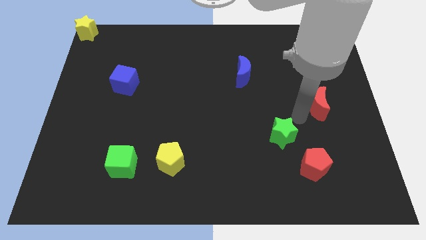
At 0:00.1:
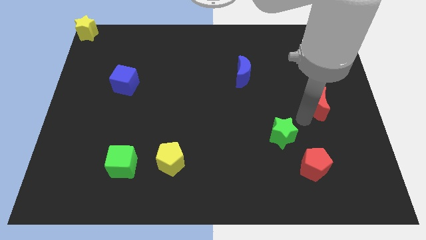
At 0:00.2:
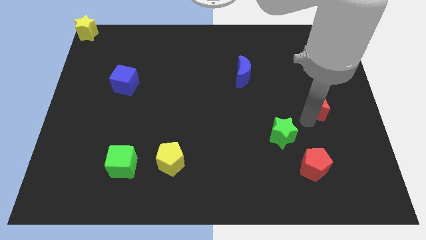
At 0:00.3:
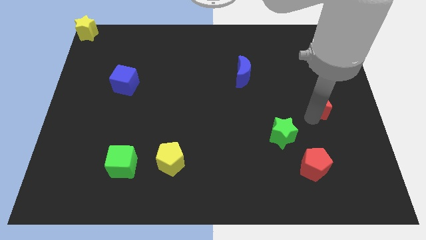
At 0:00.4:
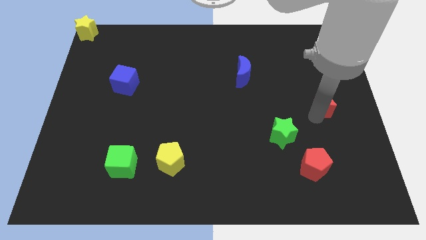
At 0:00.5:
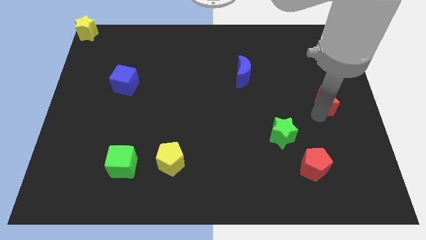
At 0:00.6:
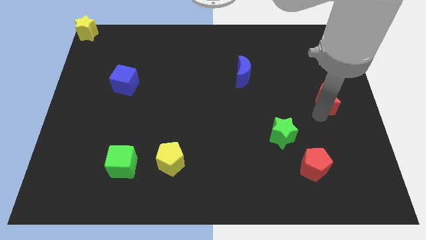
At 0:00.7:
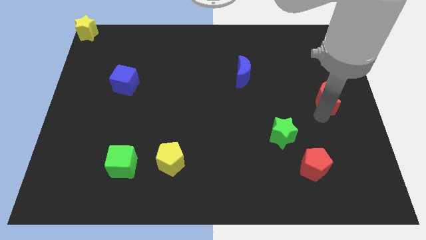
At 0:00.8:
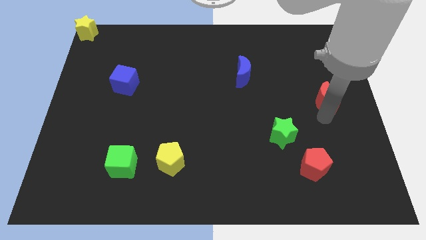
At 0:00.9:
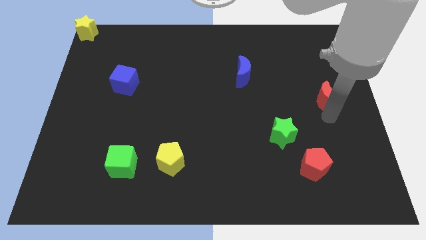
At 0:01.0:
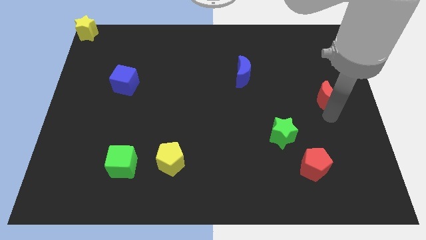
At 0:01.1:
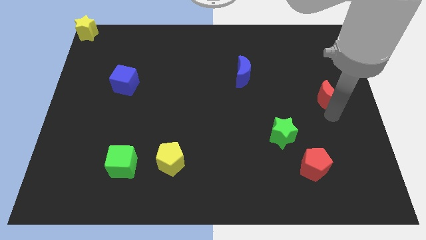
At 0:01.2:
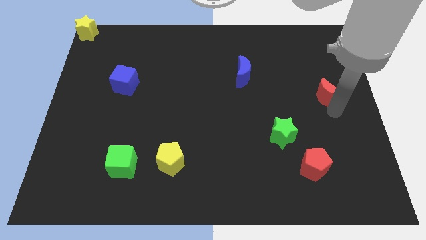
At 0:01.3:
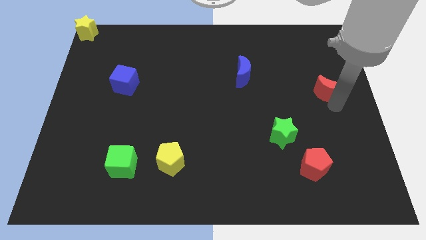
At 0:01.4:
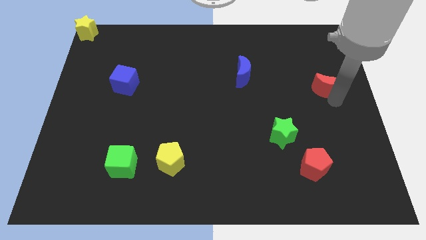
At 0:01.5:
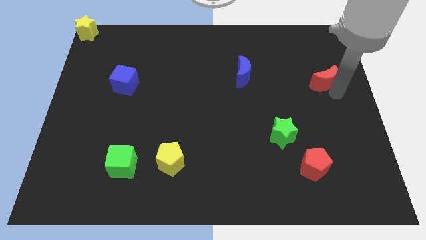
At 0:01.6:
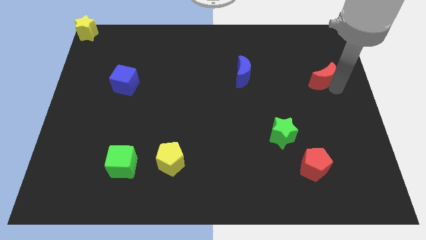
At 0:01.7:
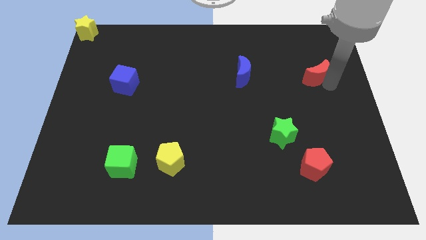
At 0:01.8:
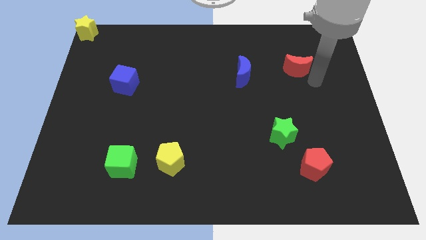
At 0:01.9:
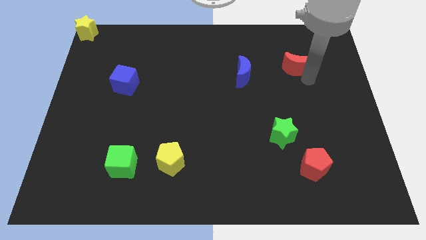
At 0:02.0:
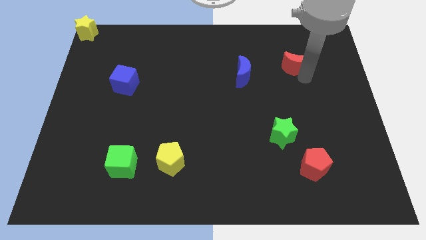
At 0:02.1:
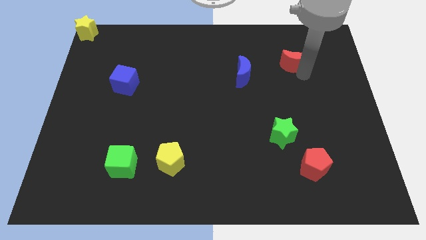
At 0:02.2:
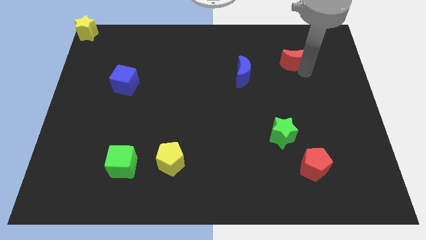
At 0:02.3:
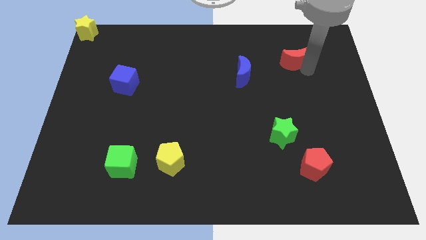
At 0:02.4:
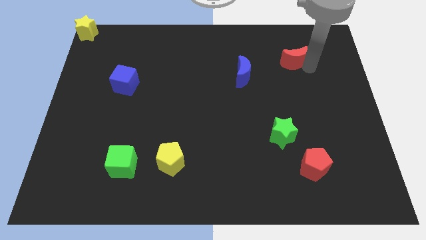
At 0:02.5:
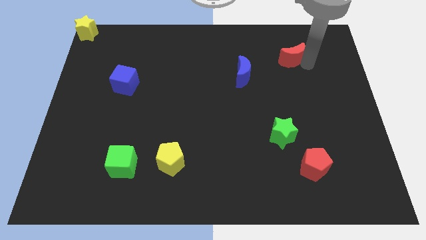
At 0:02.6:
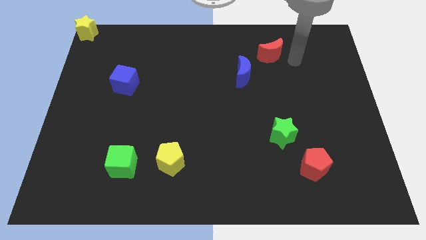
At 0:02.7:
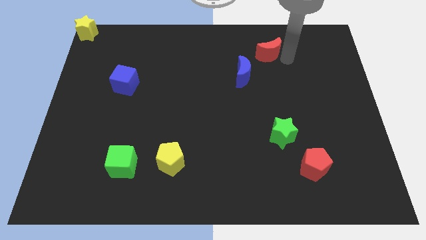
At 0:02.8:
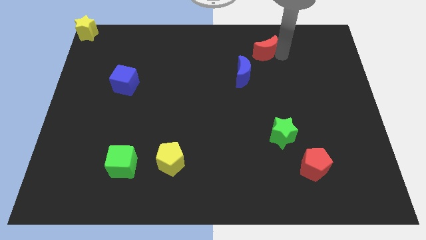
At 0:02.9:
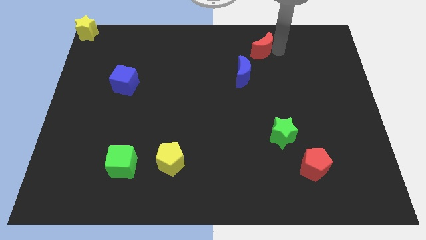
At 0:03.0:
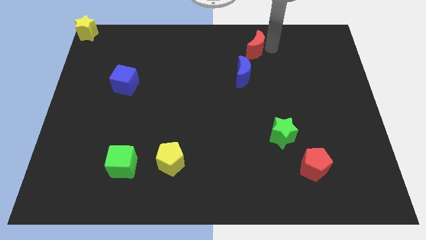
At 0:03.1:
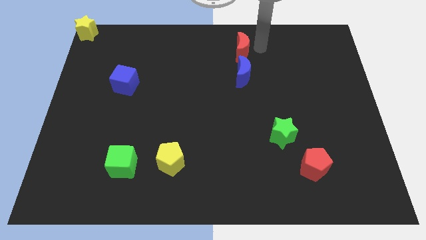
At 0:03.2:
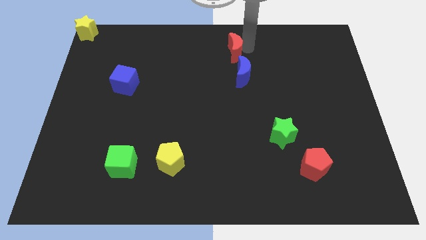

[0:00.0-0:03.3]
push the red moon to the top of the blue moon

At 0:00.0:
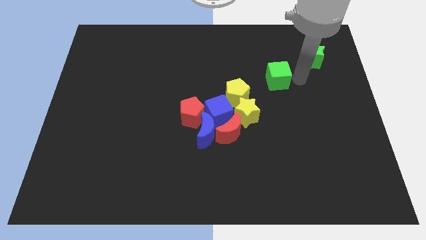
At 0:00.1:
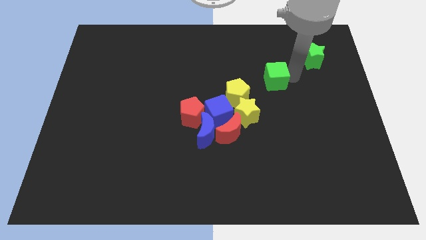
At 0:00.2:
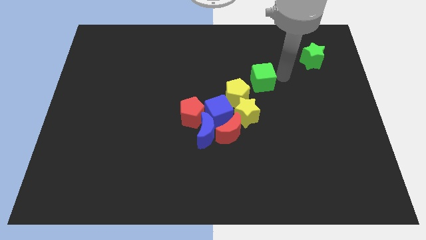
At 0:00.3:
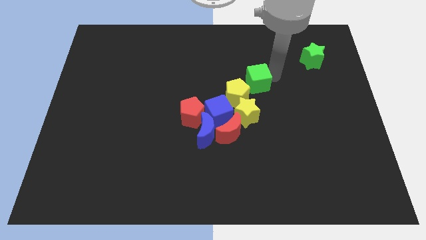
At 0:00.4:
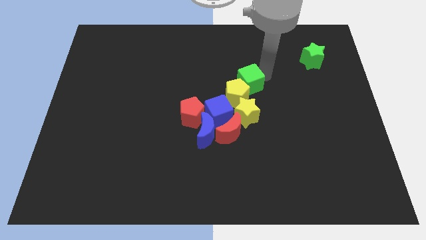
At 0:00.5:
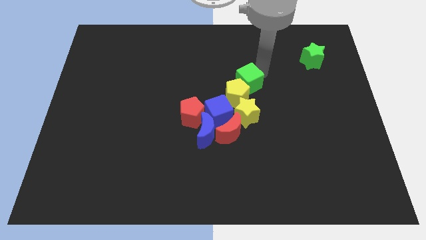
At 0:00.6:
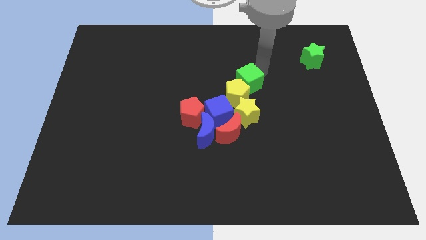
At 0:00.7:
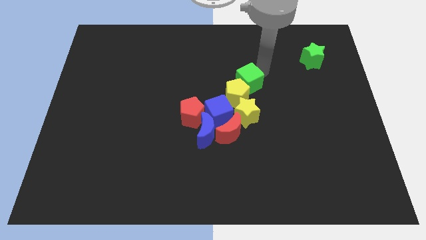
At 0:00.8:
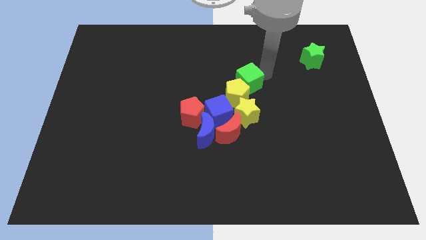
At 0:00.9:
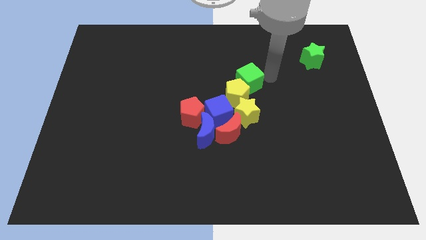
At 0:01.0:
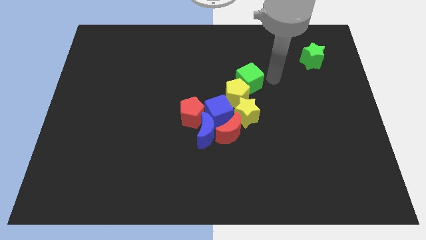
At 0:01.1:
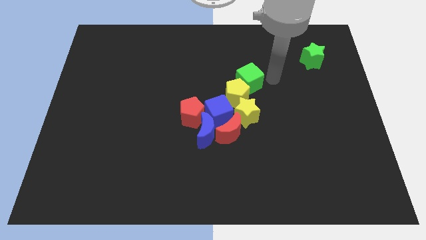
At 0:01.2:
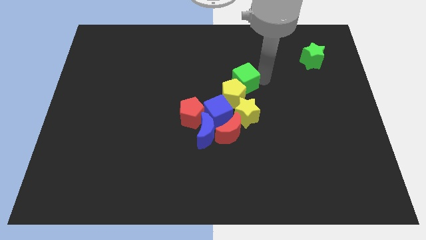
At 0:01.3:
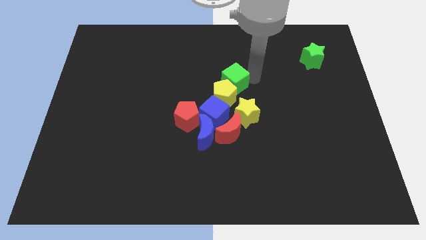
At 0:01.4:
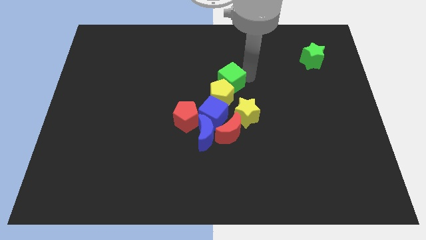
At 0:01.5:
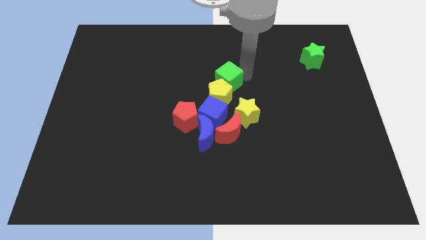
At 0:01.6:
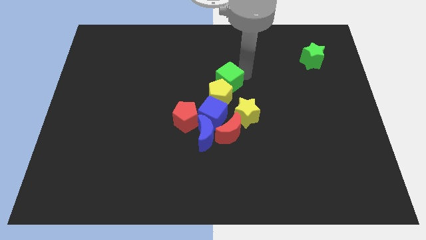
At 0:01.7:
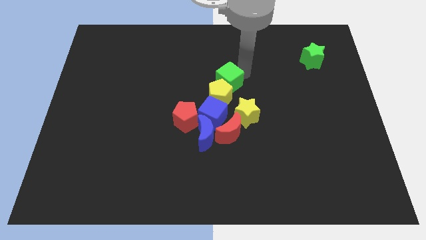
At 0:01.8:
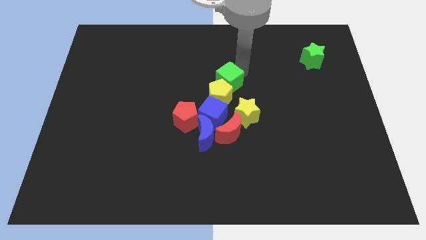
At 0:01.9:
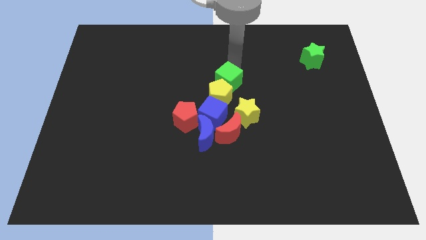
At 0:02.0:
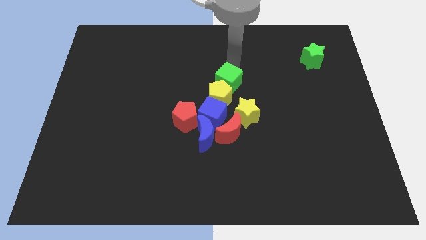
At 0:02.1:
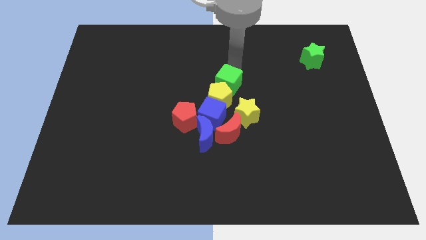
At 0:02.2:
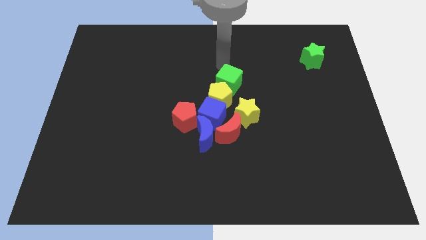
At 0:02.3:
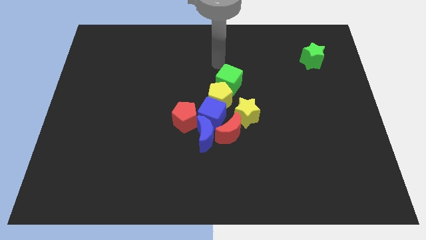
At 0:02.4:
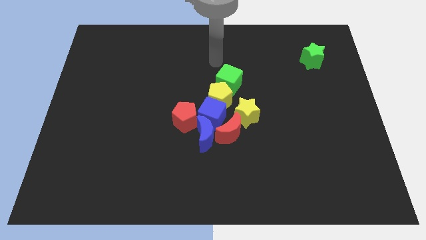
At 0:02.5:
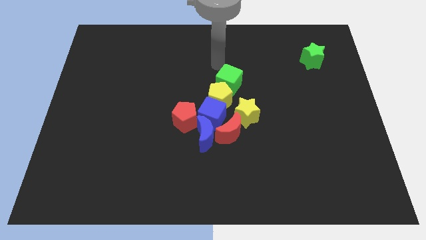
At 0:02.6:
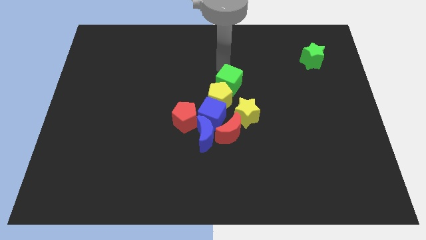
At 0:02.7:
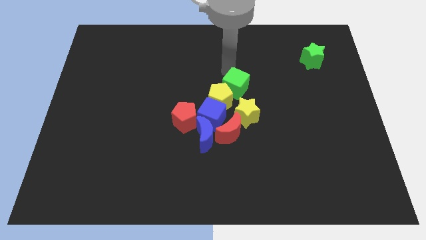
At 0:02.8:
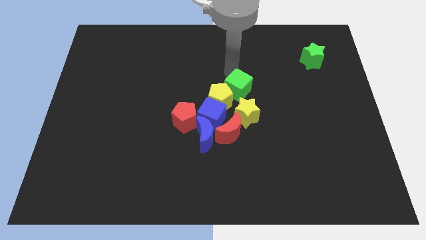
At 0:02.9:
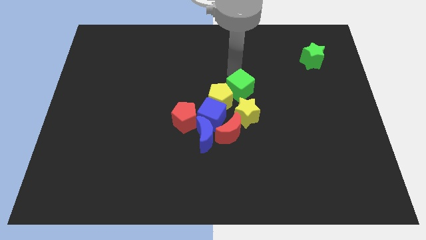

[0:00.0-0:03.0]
push green star above yellow star

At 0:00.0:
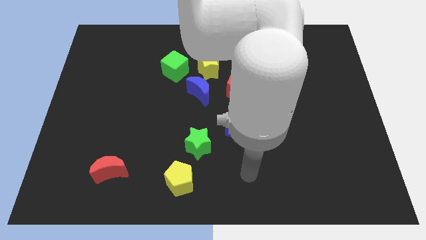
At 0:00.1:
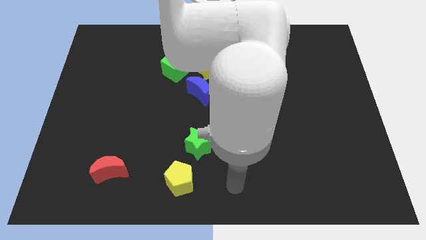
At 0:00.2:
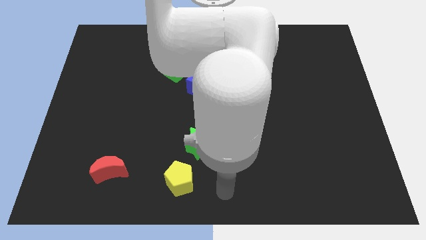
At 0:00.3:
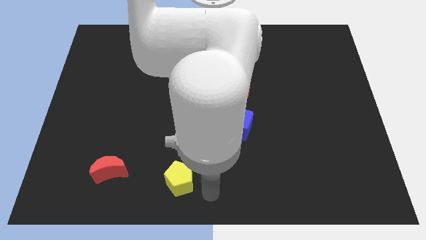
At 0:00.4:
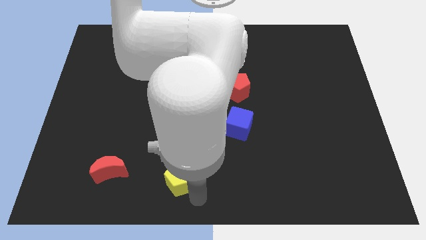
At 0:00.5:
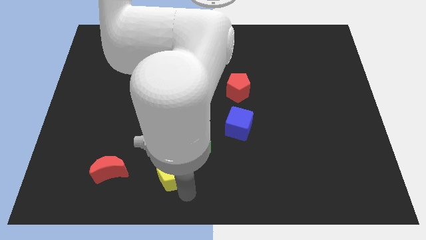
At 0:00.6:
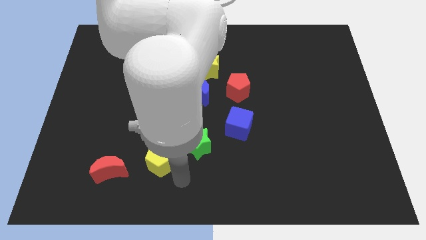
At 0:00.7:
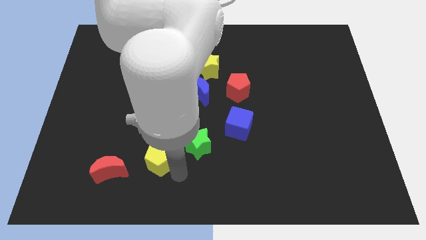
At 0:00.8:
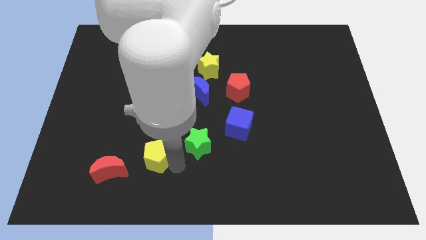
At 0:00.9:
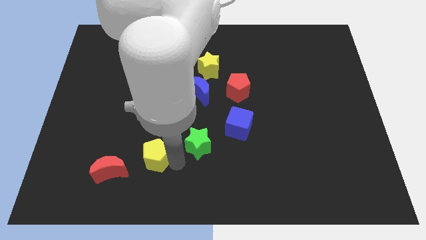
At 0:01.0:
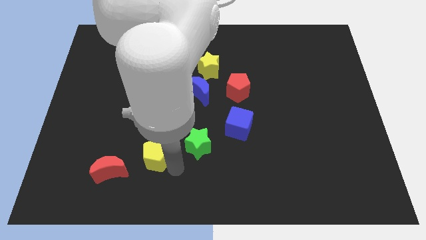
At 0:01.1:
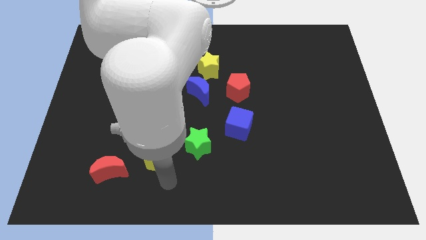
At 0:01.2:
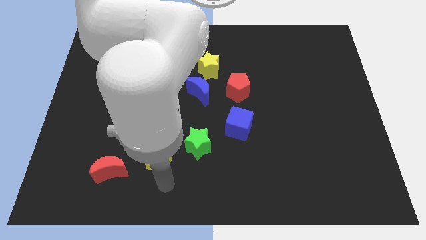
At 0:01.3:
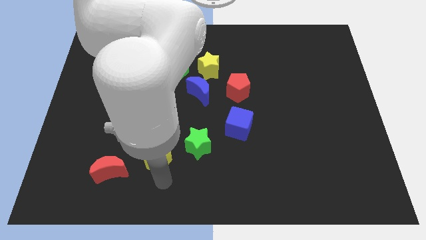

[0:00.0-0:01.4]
place the yellow pentagon in between the red crescent and the green star

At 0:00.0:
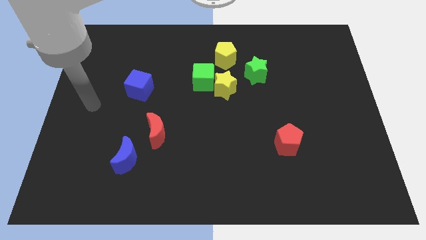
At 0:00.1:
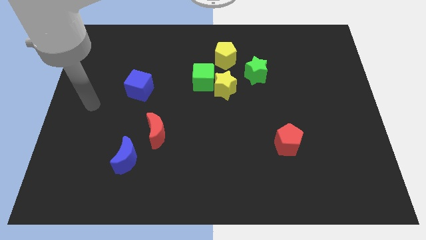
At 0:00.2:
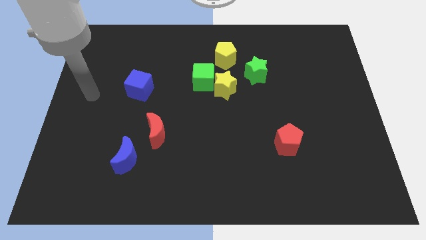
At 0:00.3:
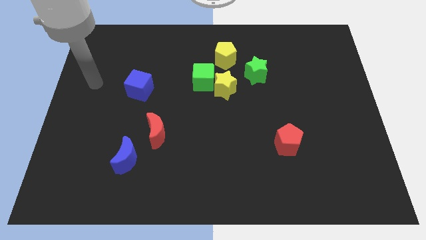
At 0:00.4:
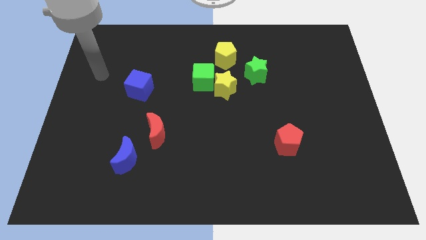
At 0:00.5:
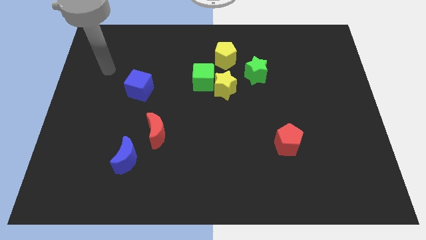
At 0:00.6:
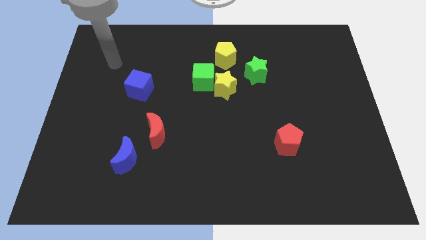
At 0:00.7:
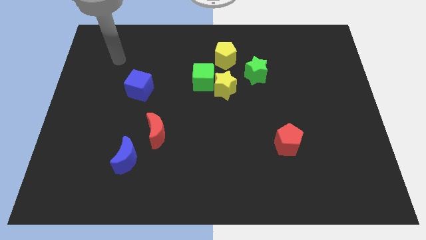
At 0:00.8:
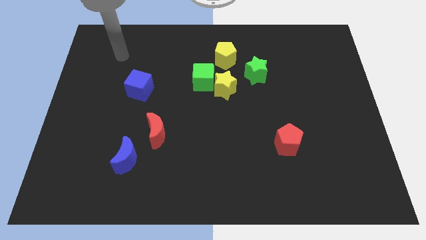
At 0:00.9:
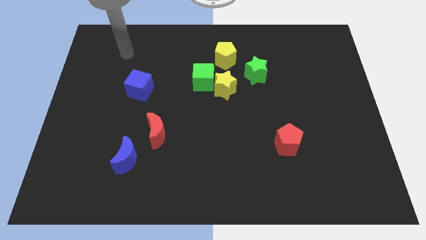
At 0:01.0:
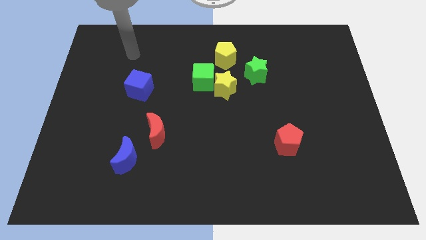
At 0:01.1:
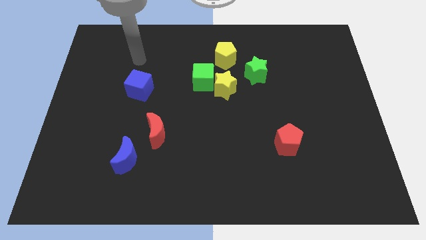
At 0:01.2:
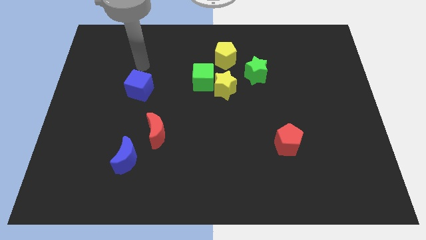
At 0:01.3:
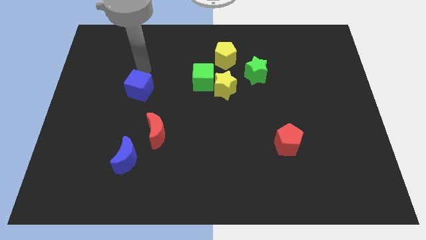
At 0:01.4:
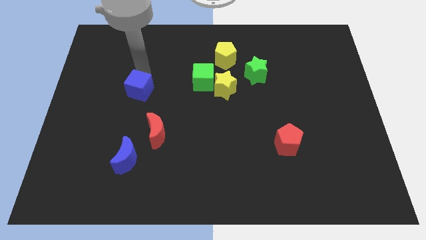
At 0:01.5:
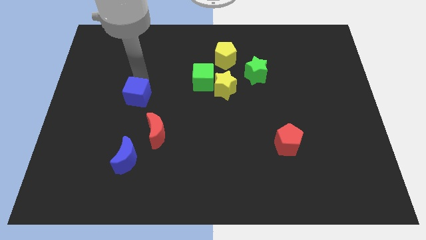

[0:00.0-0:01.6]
tap the blue cube
